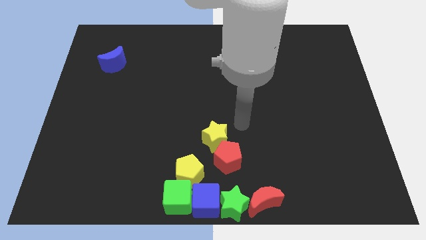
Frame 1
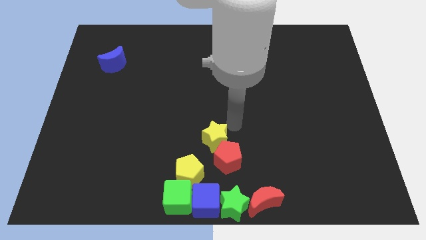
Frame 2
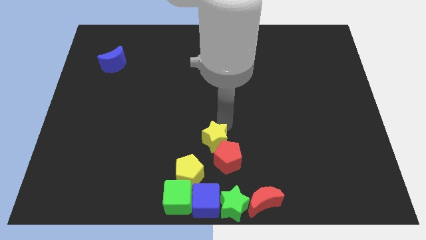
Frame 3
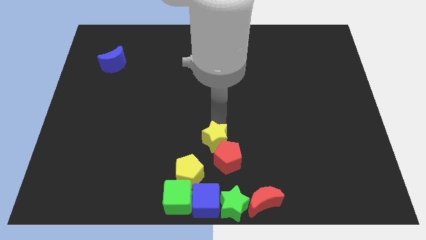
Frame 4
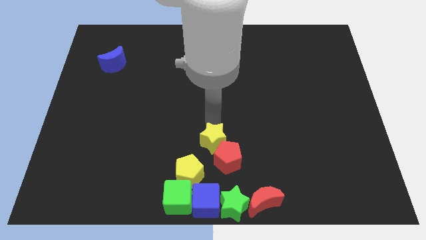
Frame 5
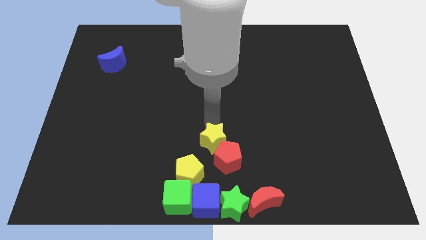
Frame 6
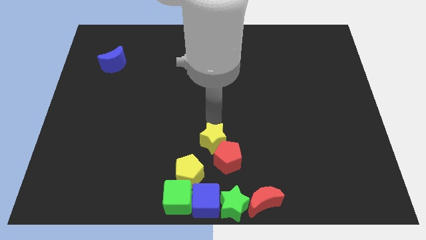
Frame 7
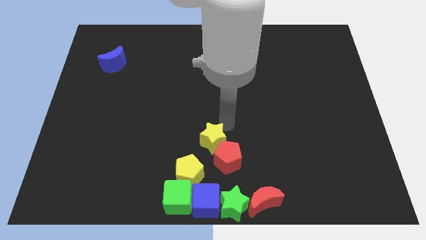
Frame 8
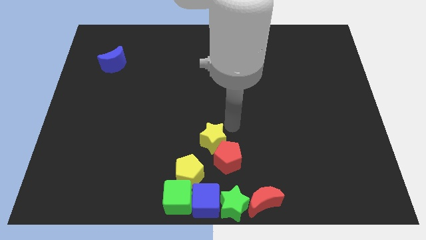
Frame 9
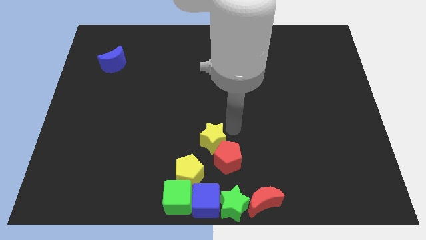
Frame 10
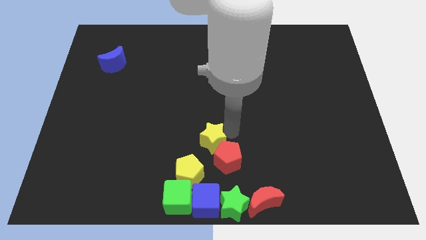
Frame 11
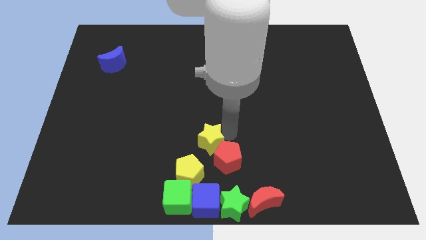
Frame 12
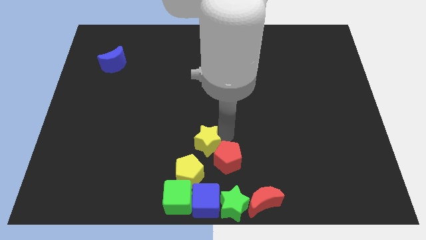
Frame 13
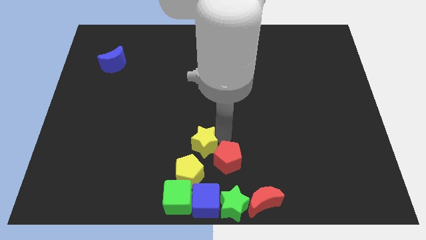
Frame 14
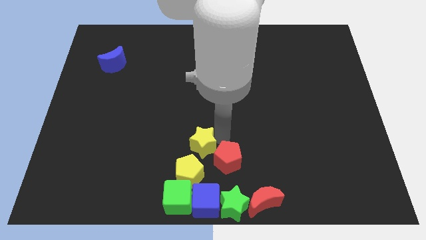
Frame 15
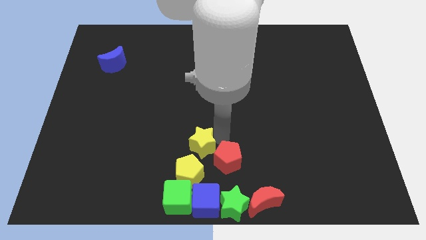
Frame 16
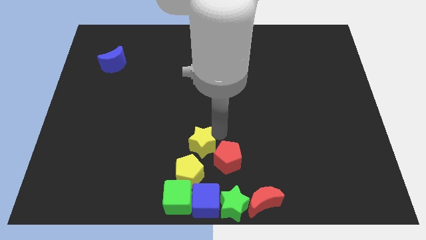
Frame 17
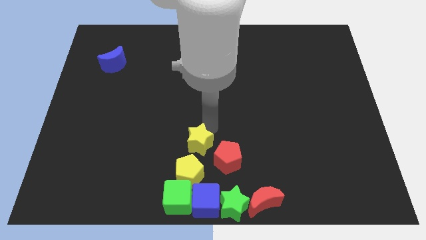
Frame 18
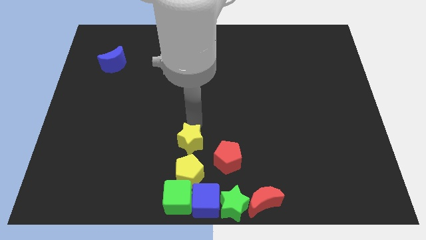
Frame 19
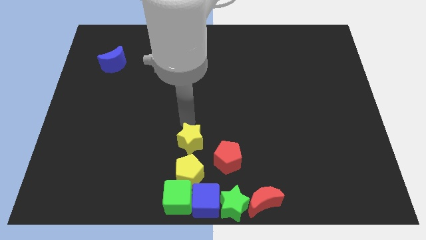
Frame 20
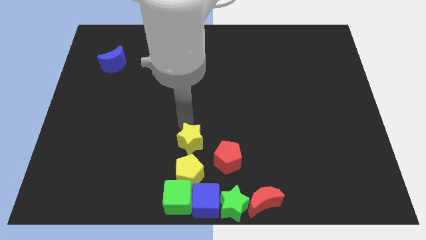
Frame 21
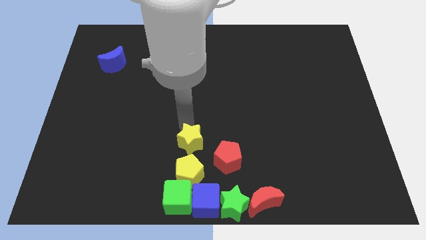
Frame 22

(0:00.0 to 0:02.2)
put the yellow star to the top side of the yellow pentagon

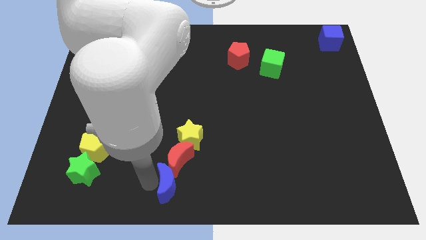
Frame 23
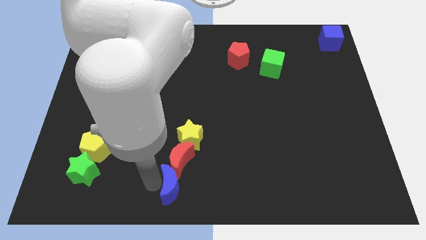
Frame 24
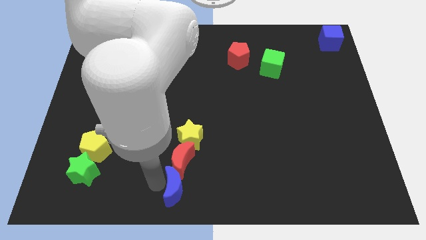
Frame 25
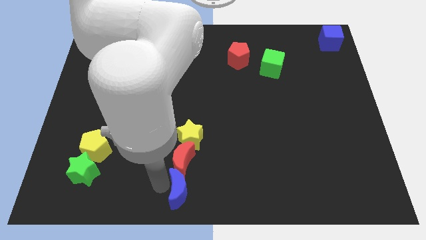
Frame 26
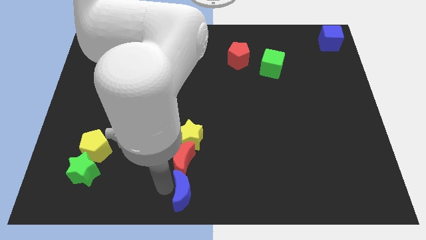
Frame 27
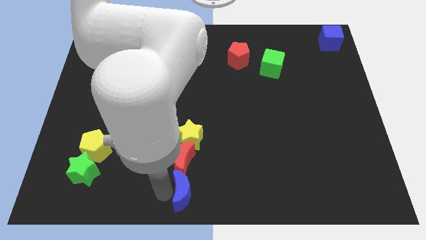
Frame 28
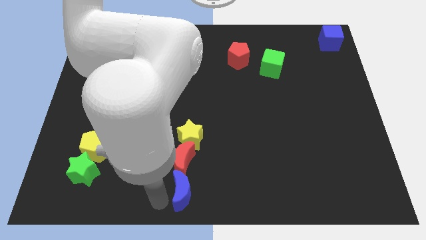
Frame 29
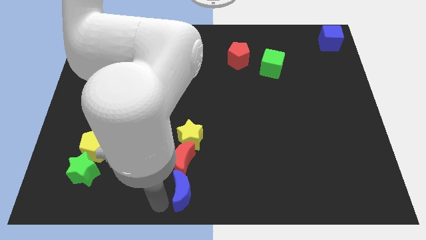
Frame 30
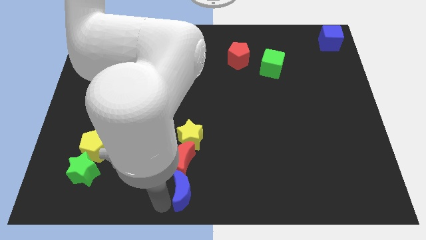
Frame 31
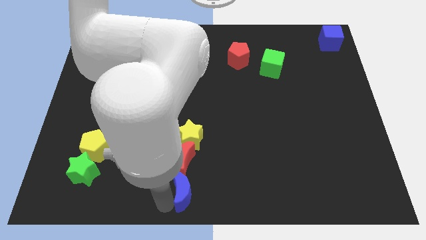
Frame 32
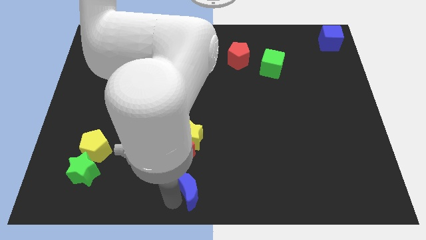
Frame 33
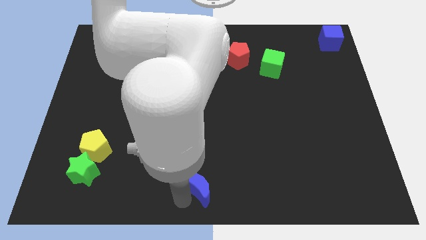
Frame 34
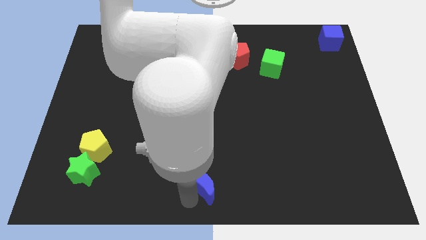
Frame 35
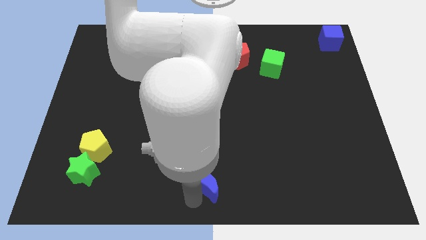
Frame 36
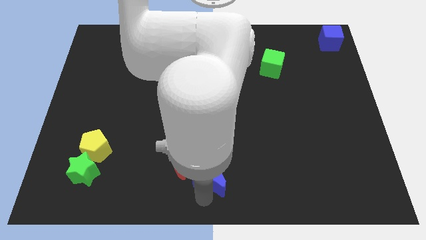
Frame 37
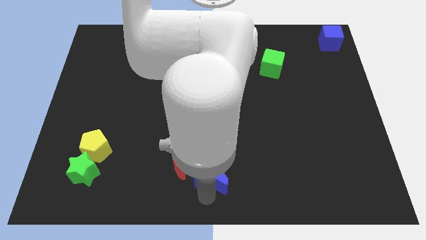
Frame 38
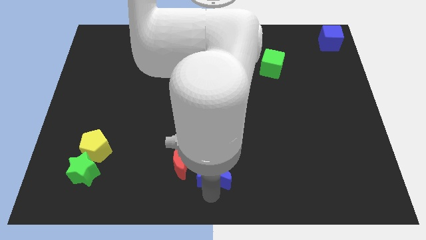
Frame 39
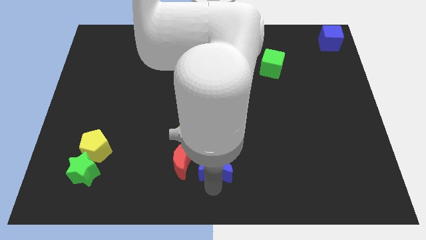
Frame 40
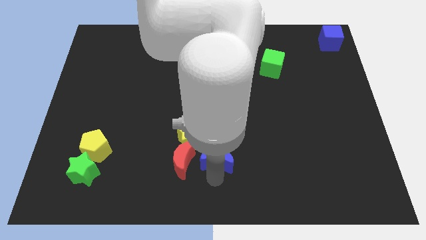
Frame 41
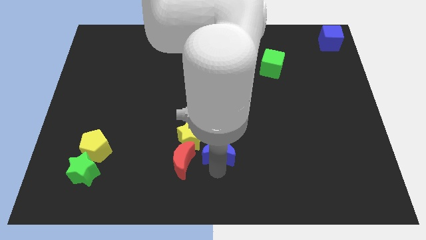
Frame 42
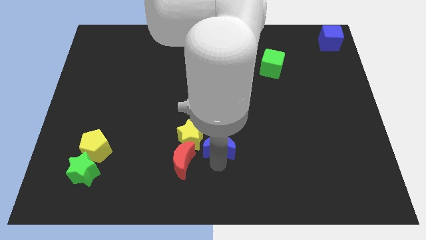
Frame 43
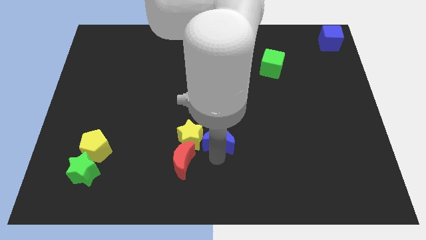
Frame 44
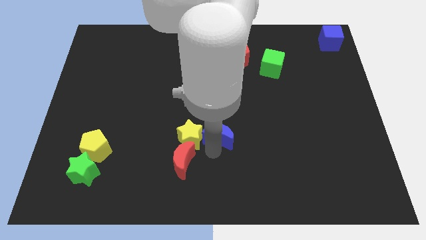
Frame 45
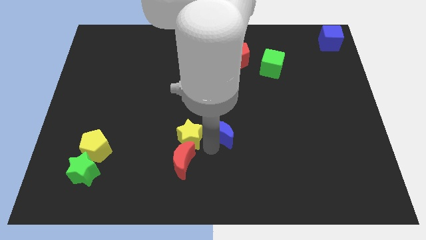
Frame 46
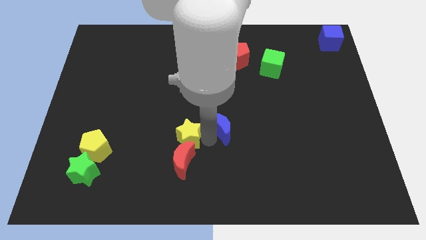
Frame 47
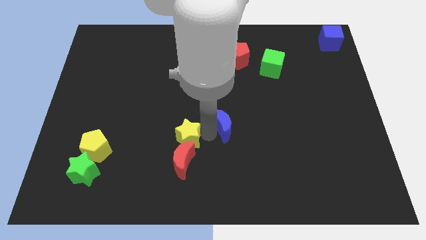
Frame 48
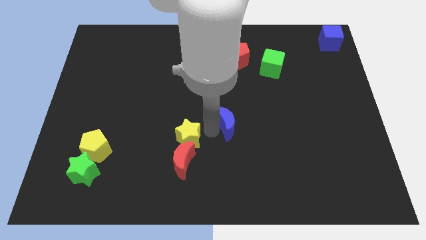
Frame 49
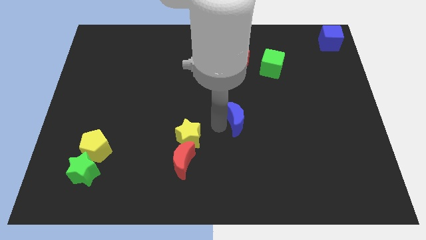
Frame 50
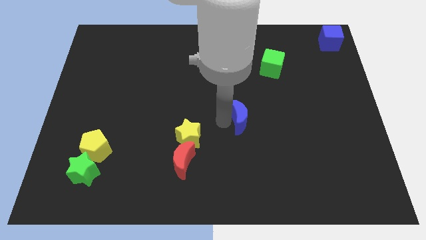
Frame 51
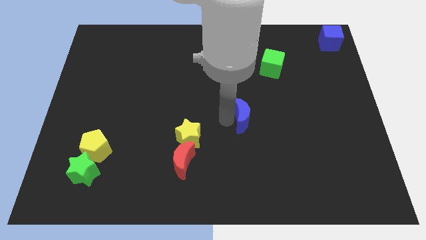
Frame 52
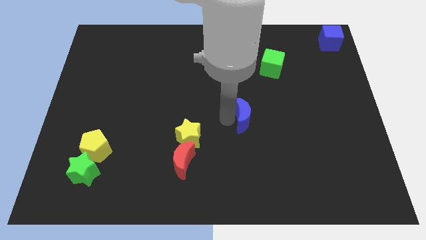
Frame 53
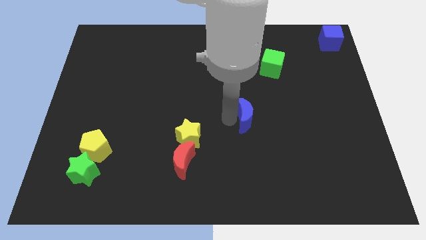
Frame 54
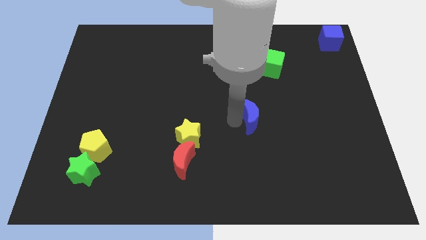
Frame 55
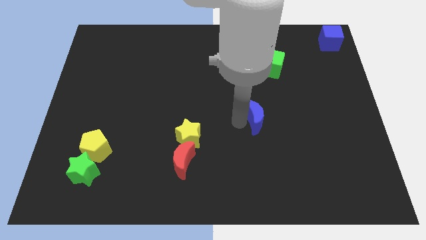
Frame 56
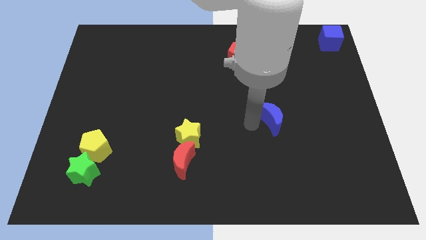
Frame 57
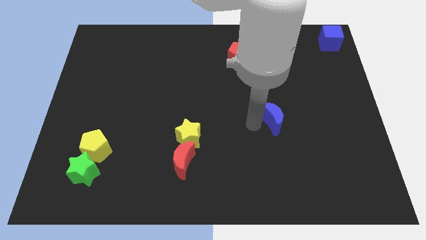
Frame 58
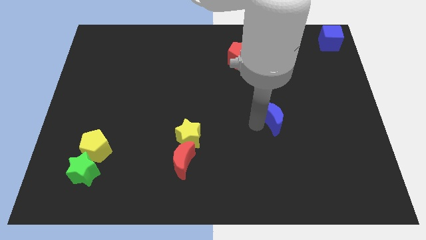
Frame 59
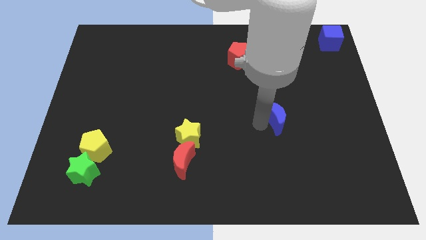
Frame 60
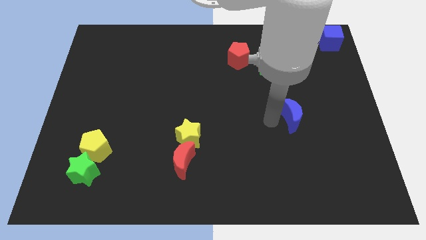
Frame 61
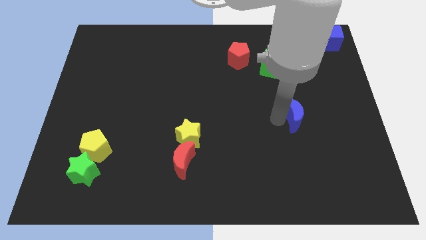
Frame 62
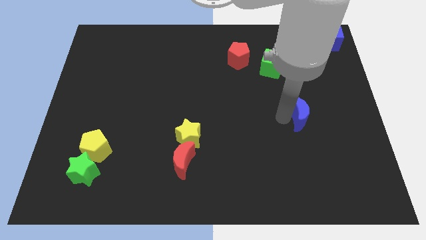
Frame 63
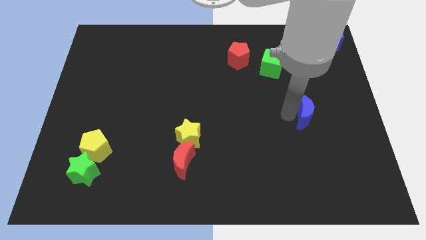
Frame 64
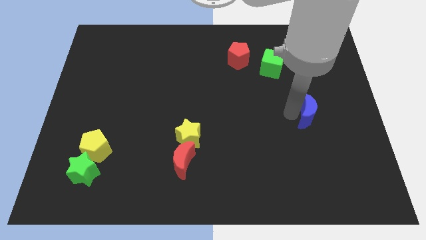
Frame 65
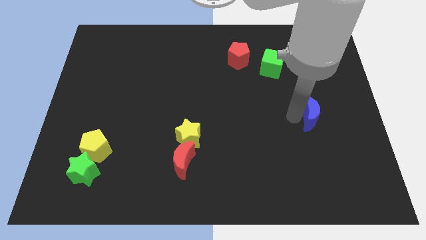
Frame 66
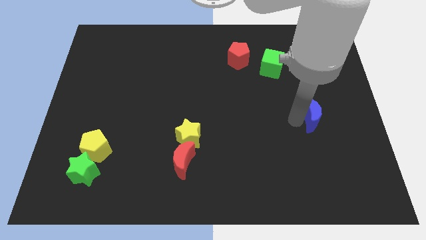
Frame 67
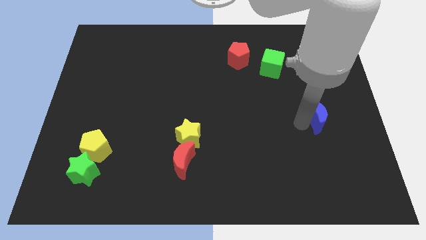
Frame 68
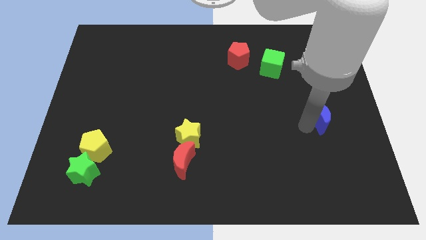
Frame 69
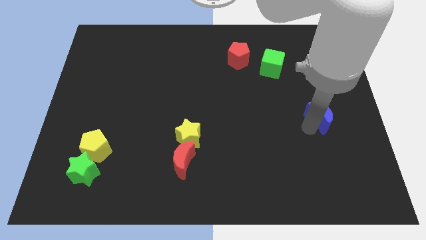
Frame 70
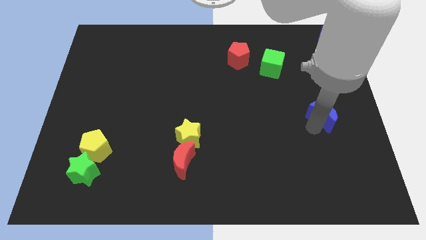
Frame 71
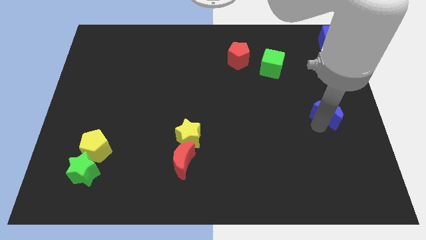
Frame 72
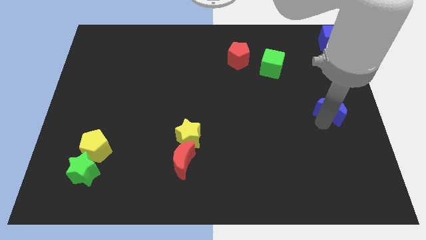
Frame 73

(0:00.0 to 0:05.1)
drag the blue moon to the right side of the table

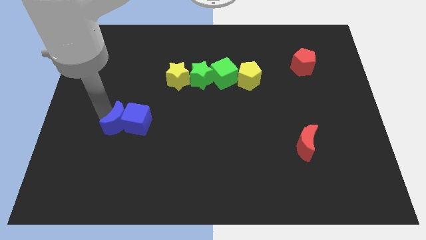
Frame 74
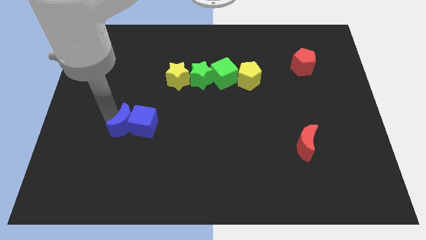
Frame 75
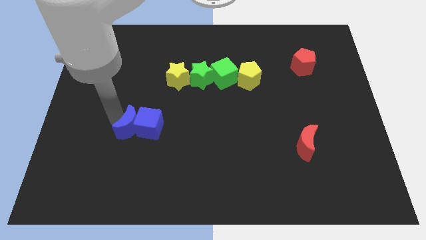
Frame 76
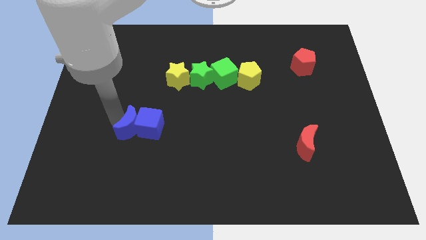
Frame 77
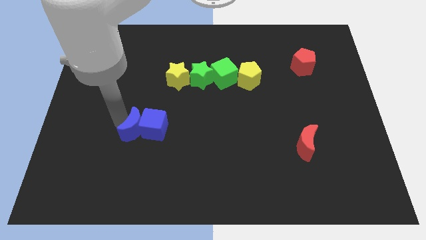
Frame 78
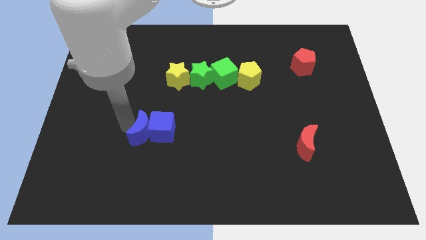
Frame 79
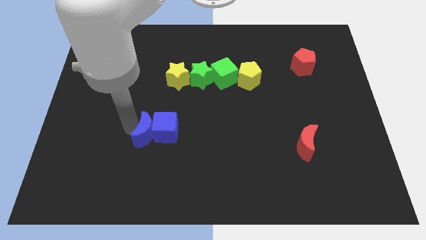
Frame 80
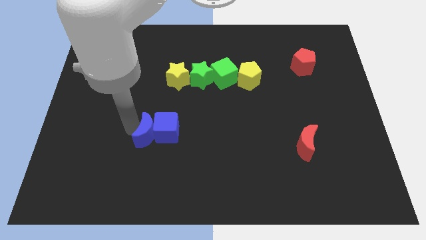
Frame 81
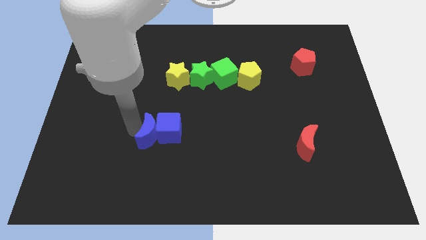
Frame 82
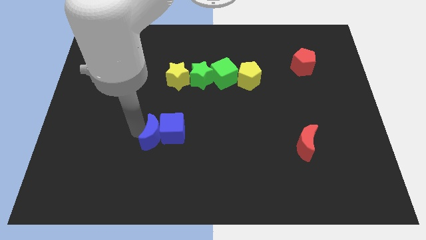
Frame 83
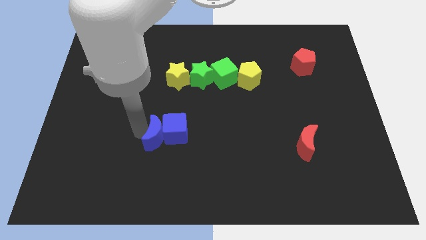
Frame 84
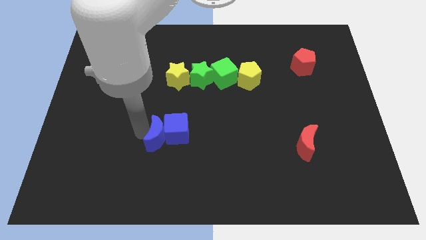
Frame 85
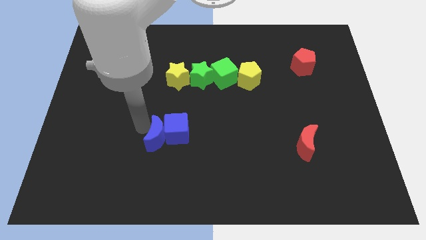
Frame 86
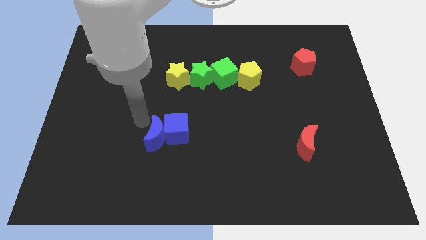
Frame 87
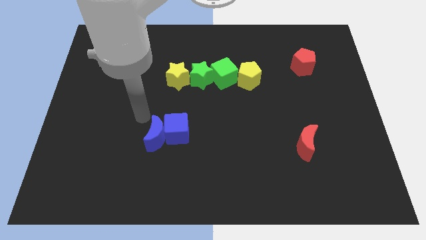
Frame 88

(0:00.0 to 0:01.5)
push the blue blocks towards the right side
